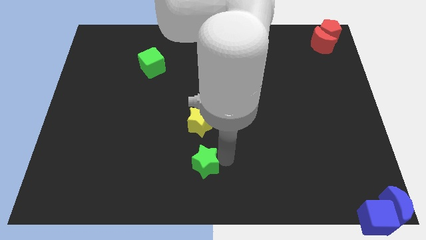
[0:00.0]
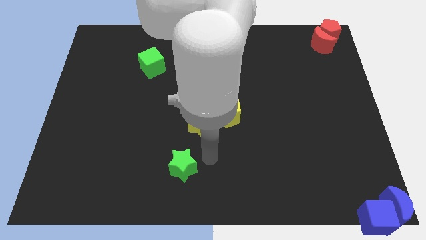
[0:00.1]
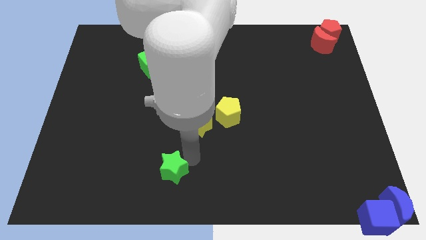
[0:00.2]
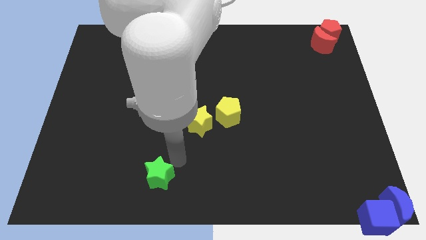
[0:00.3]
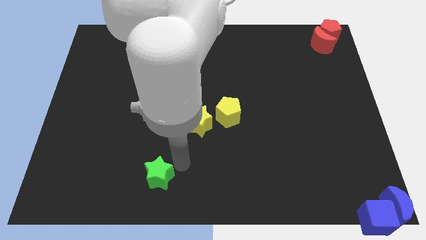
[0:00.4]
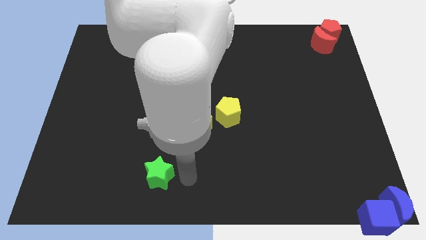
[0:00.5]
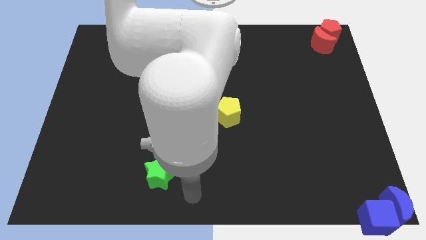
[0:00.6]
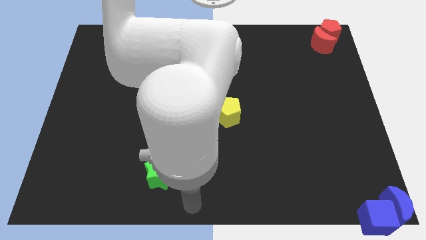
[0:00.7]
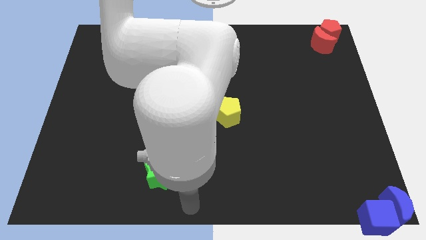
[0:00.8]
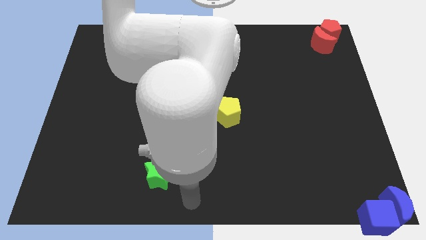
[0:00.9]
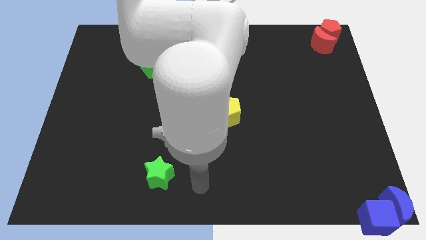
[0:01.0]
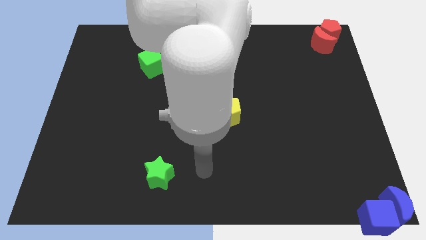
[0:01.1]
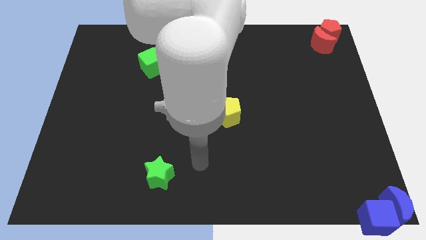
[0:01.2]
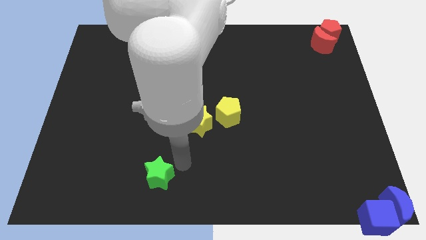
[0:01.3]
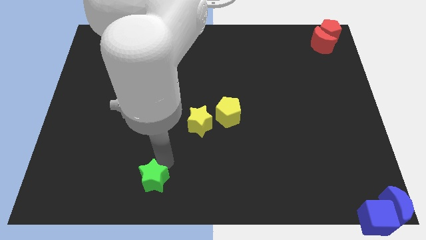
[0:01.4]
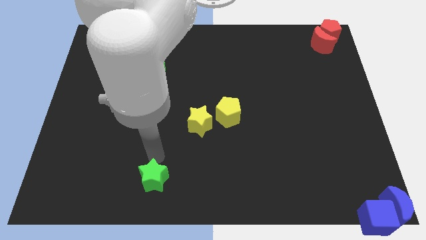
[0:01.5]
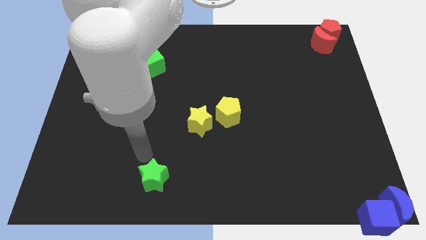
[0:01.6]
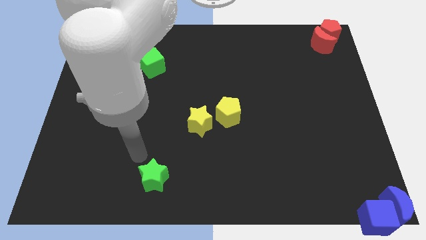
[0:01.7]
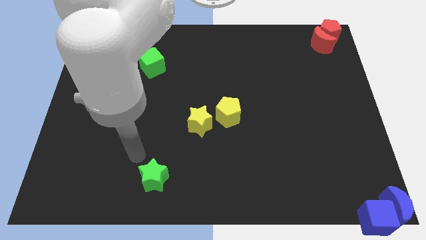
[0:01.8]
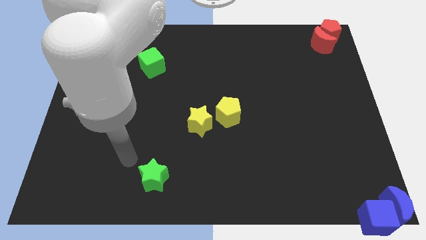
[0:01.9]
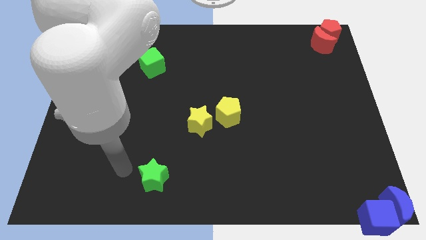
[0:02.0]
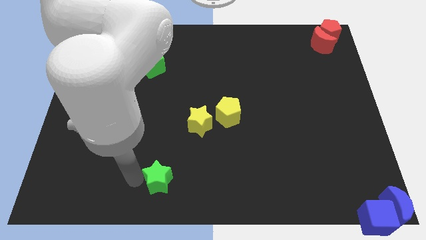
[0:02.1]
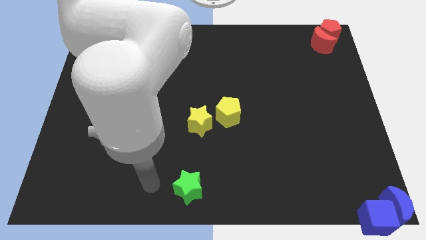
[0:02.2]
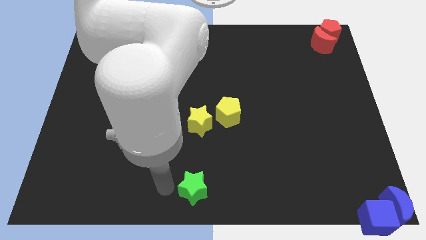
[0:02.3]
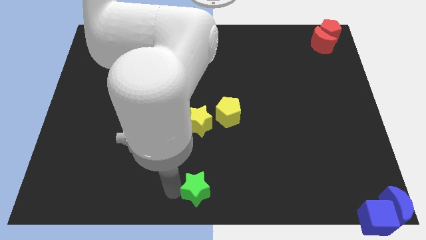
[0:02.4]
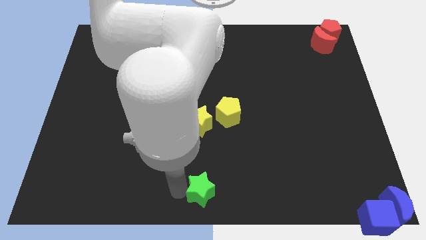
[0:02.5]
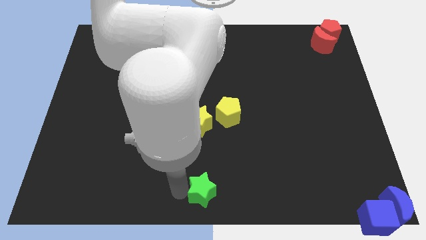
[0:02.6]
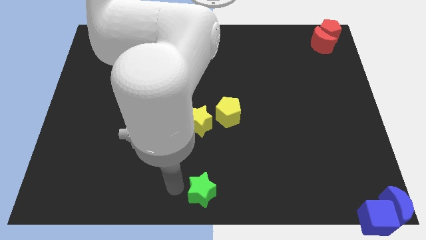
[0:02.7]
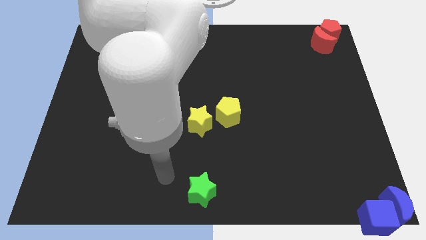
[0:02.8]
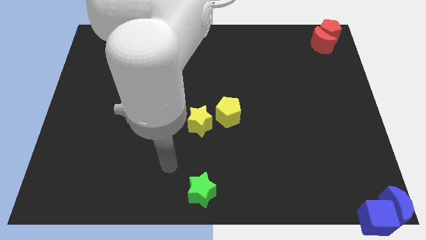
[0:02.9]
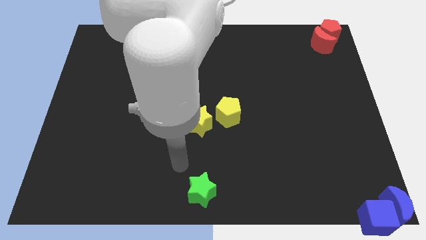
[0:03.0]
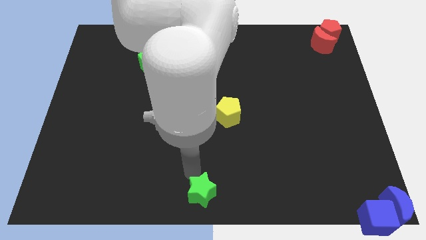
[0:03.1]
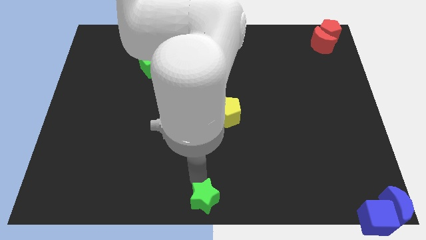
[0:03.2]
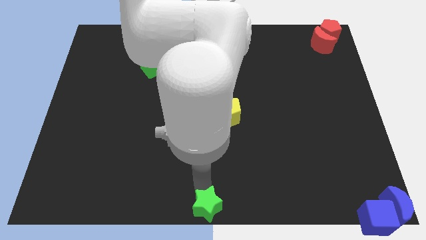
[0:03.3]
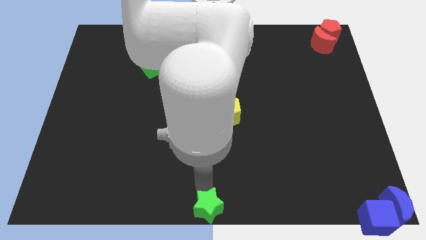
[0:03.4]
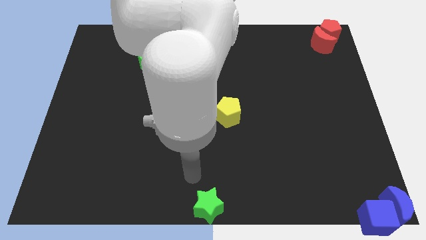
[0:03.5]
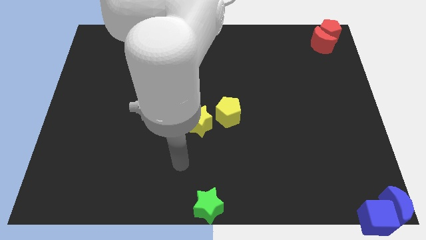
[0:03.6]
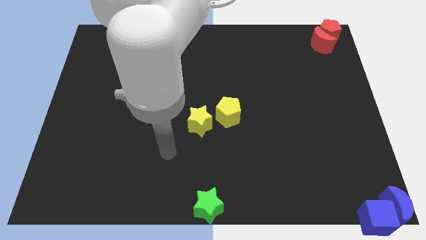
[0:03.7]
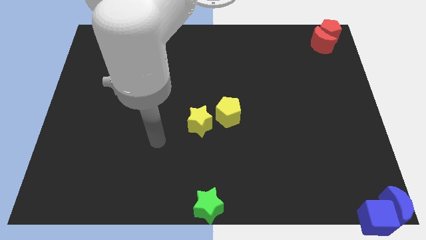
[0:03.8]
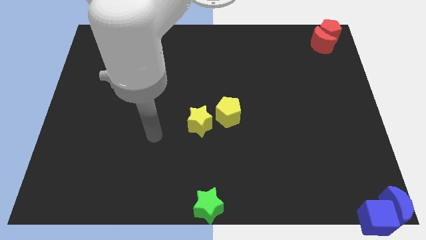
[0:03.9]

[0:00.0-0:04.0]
place the green star at the bottom center of the board

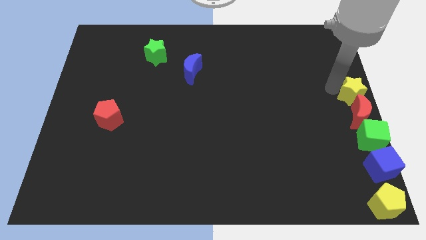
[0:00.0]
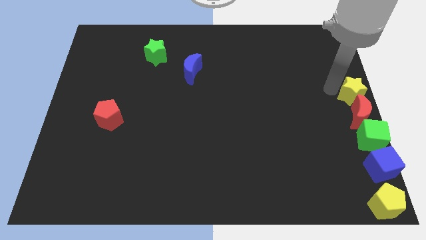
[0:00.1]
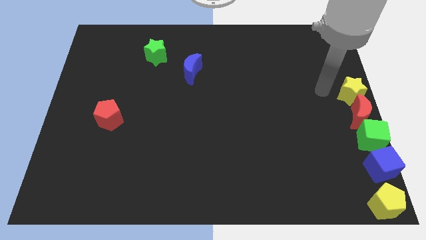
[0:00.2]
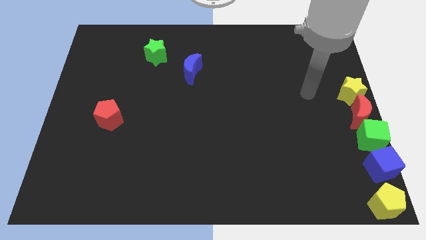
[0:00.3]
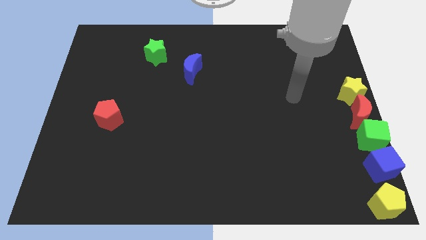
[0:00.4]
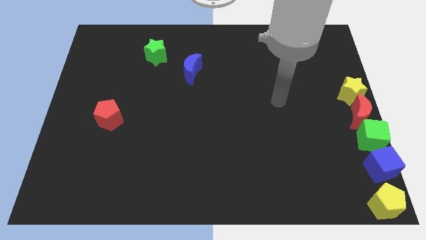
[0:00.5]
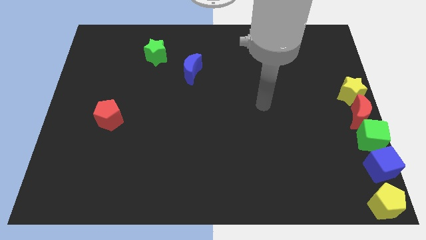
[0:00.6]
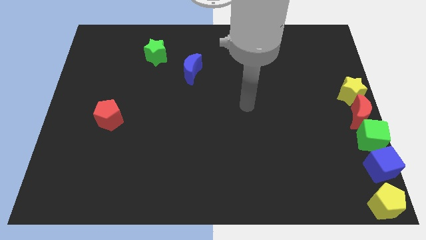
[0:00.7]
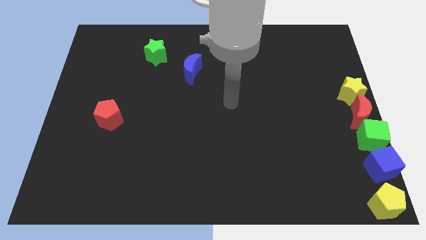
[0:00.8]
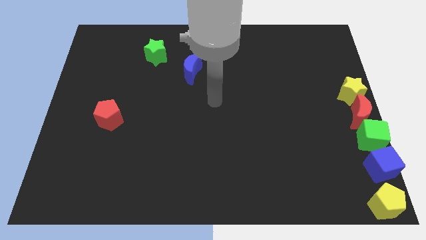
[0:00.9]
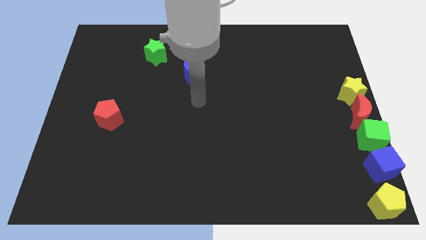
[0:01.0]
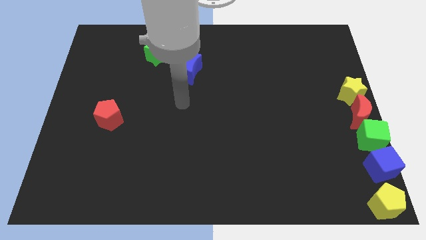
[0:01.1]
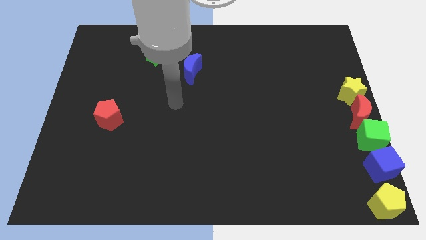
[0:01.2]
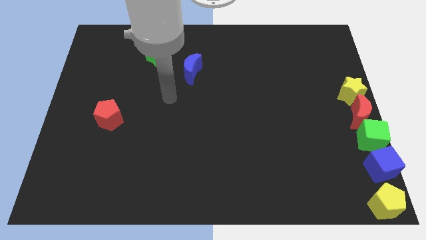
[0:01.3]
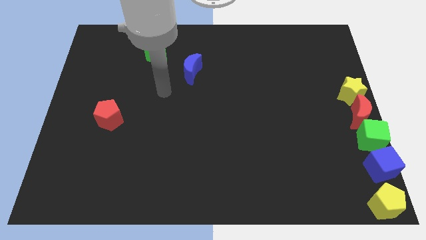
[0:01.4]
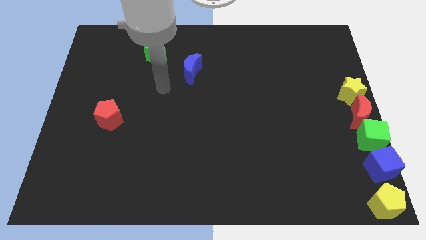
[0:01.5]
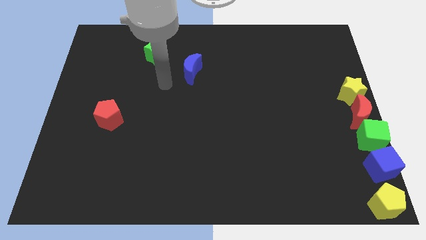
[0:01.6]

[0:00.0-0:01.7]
move your arm away from the yellow star

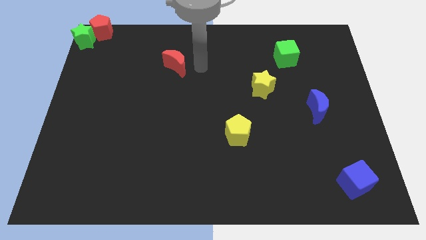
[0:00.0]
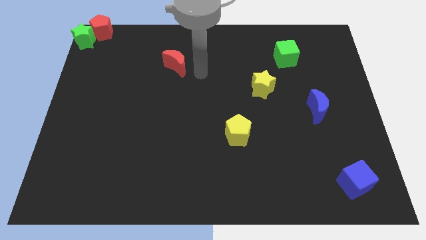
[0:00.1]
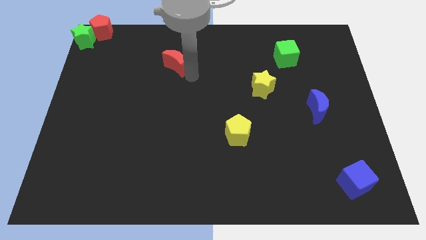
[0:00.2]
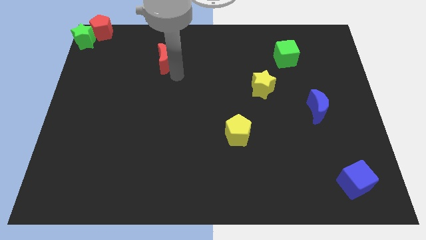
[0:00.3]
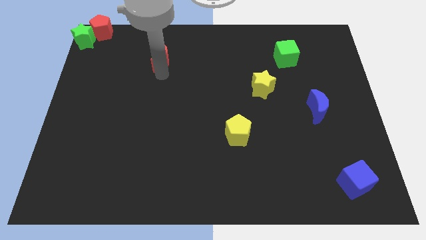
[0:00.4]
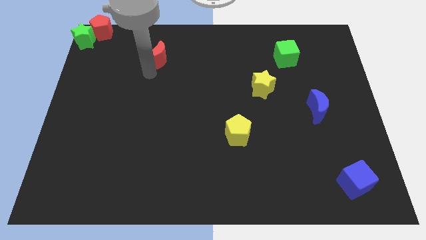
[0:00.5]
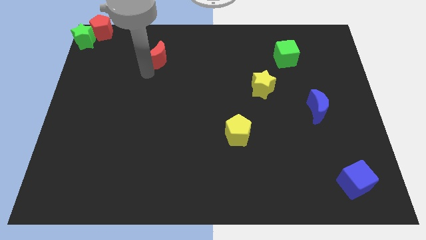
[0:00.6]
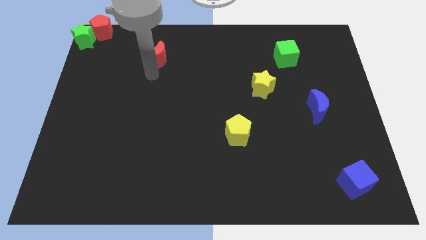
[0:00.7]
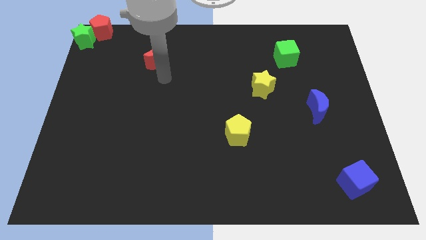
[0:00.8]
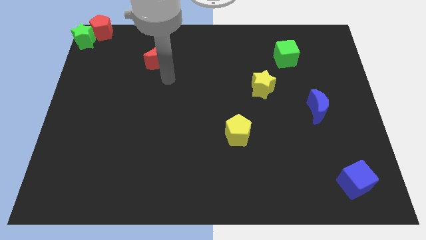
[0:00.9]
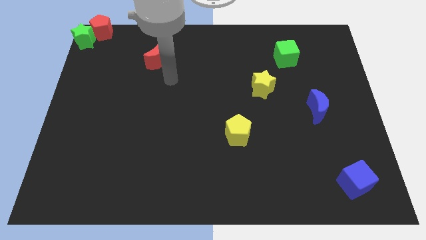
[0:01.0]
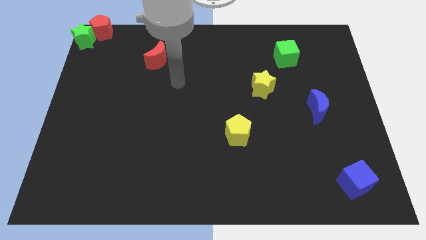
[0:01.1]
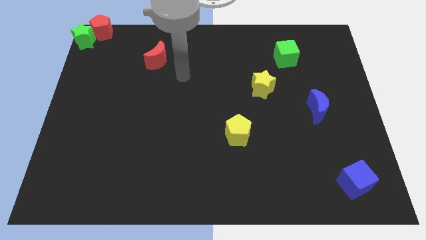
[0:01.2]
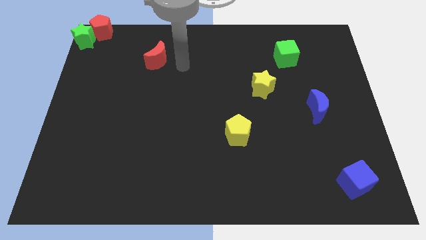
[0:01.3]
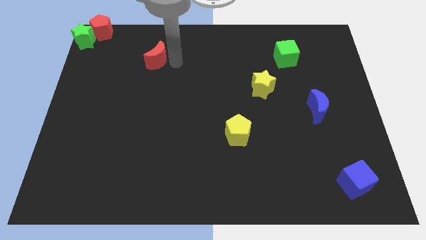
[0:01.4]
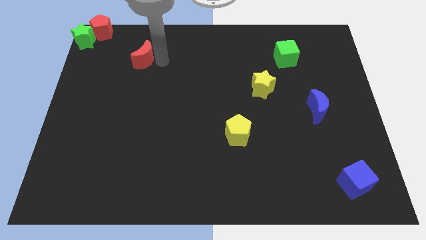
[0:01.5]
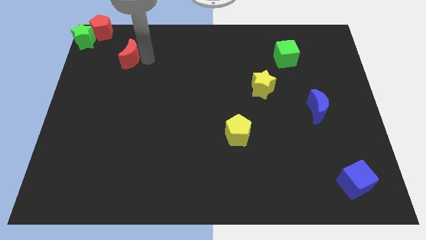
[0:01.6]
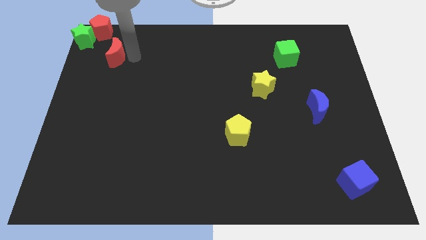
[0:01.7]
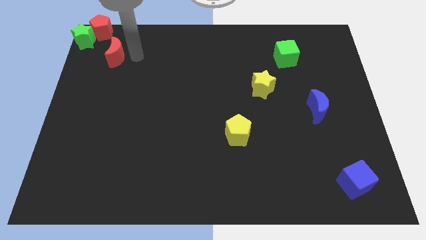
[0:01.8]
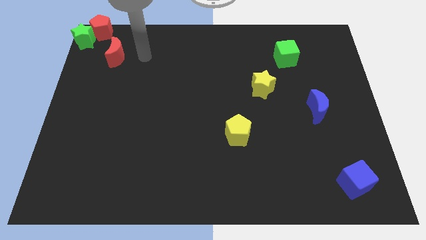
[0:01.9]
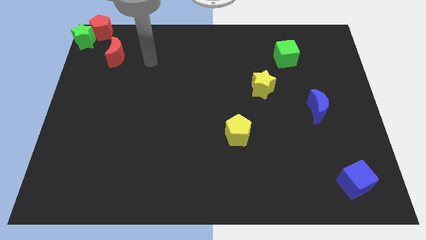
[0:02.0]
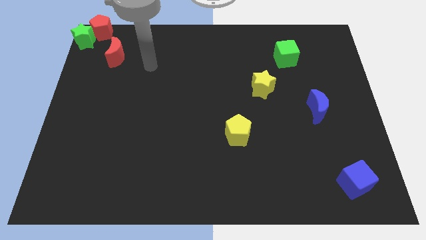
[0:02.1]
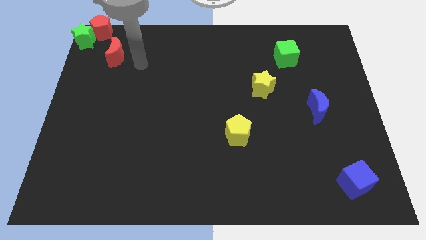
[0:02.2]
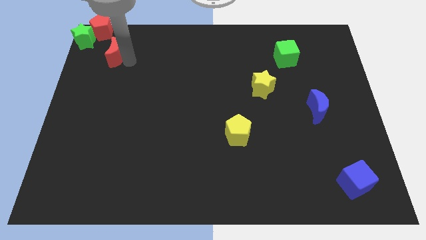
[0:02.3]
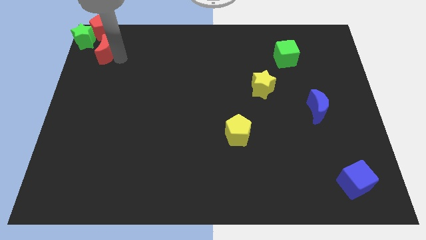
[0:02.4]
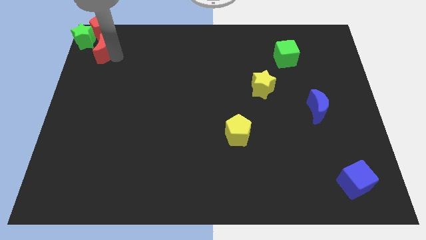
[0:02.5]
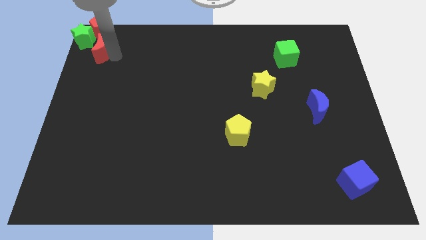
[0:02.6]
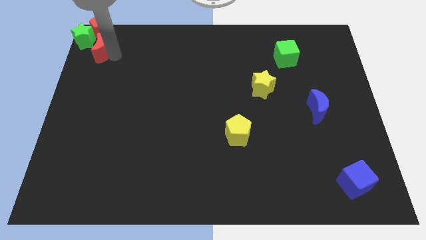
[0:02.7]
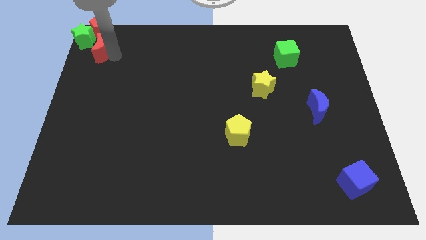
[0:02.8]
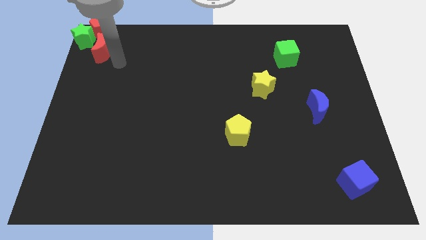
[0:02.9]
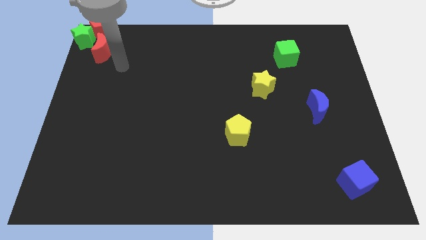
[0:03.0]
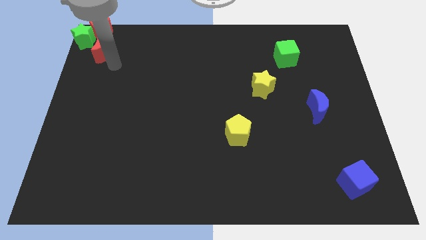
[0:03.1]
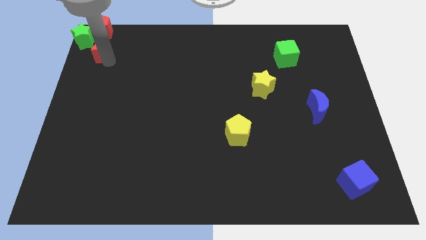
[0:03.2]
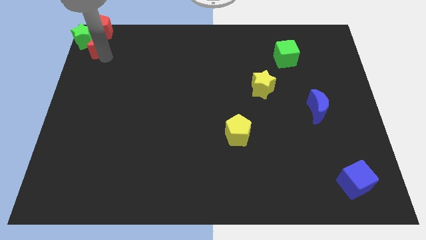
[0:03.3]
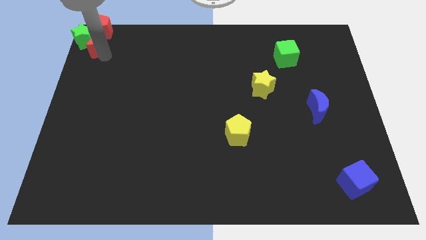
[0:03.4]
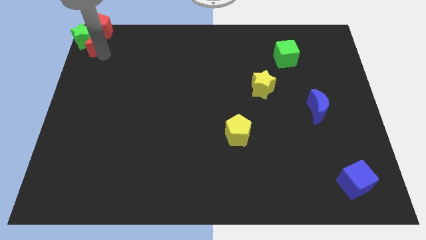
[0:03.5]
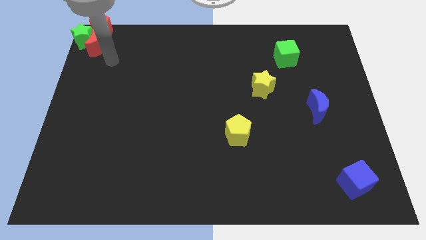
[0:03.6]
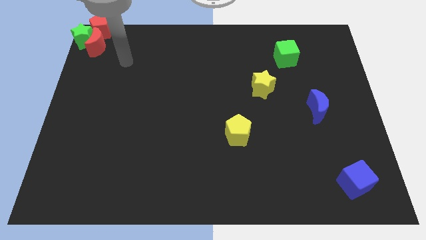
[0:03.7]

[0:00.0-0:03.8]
move the red crescent to the green star
